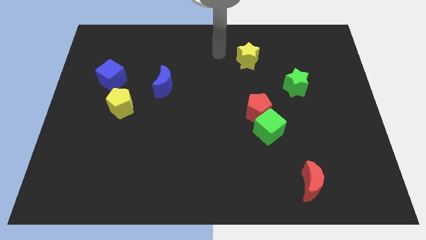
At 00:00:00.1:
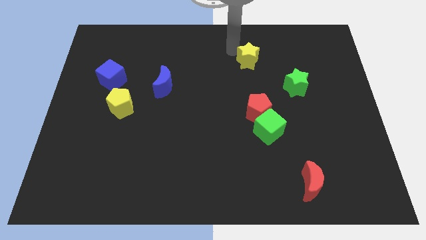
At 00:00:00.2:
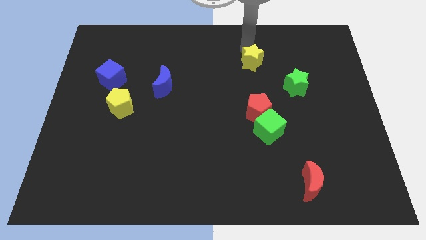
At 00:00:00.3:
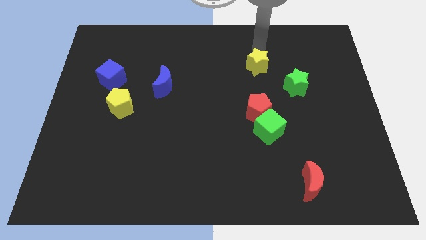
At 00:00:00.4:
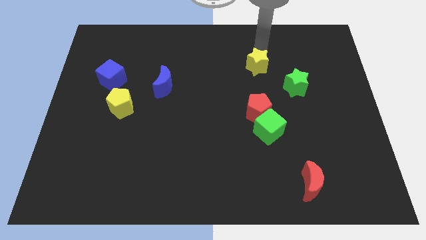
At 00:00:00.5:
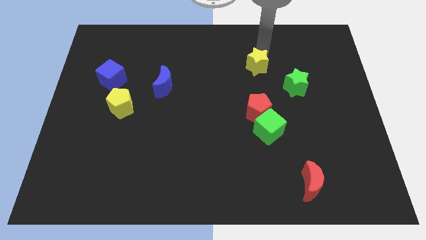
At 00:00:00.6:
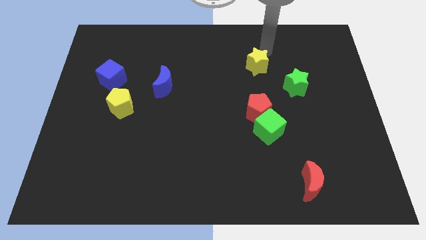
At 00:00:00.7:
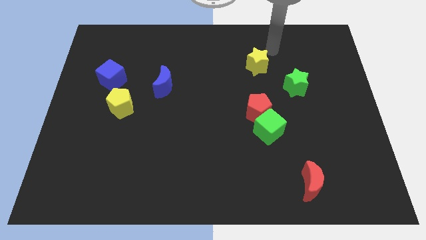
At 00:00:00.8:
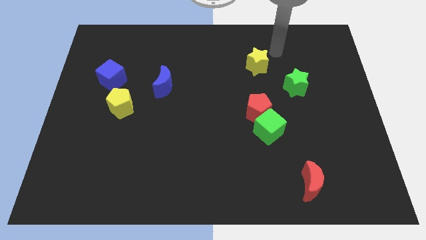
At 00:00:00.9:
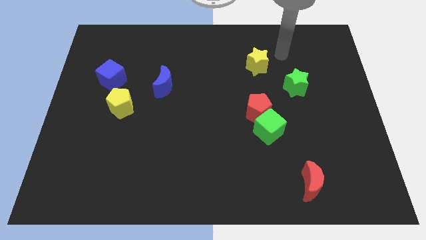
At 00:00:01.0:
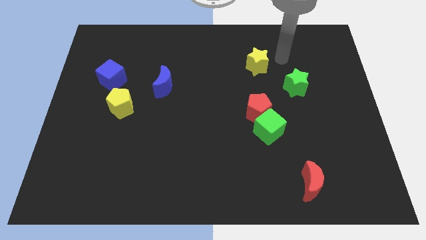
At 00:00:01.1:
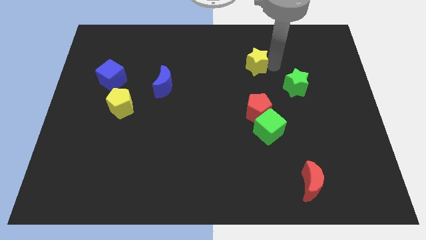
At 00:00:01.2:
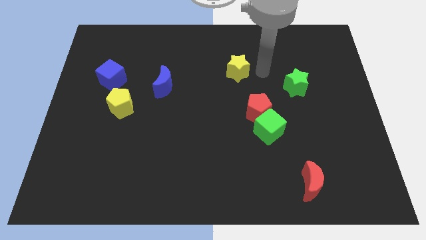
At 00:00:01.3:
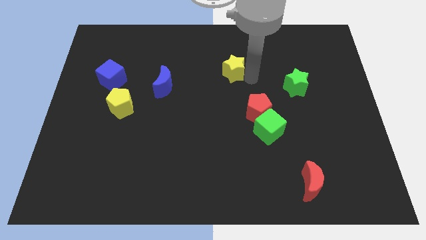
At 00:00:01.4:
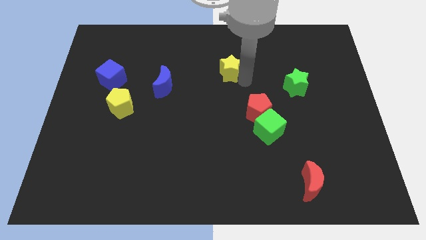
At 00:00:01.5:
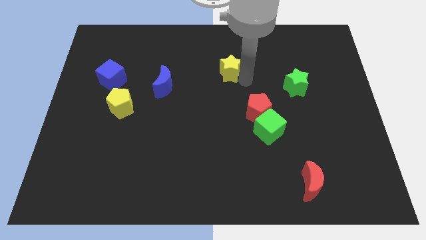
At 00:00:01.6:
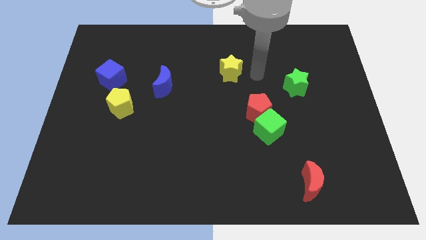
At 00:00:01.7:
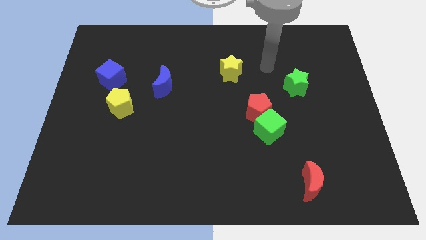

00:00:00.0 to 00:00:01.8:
slide the yellow star diagonally on the top left side of the red pentagon

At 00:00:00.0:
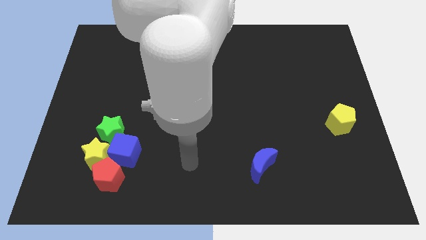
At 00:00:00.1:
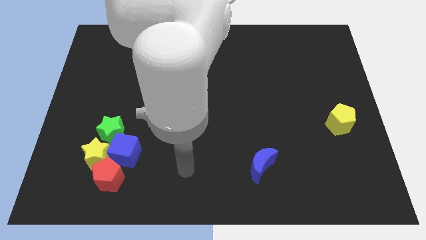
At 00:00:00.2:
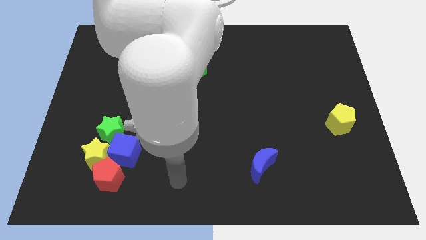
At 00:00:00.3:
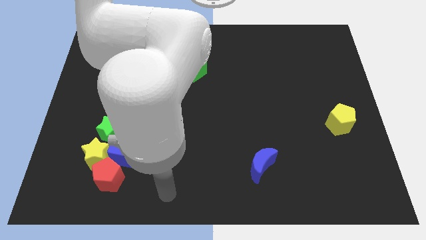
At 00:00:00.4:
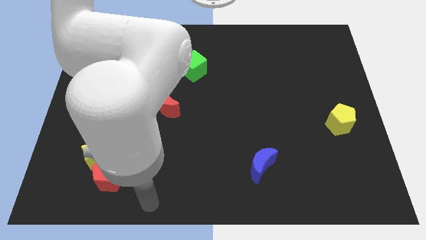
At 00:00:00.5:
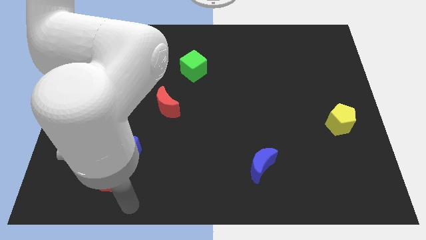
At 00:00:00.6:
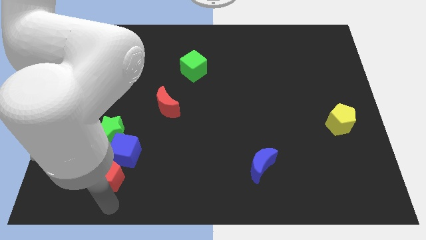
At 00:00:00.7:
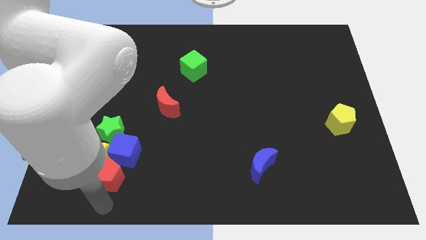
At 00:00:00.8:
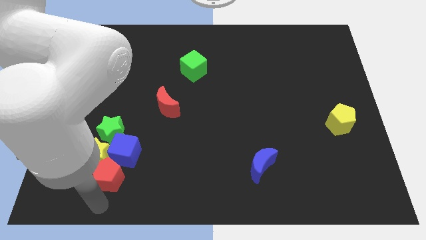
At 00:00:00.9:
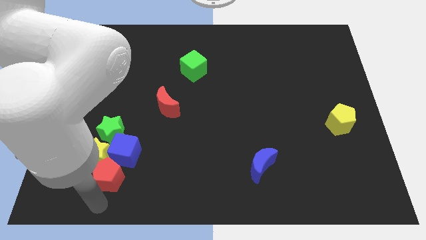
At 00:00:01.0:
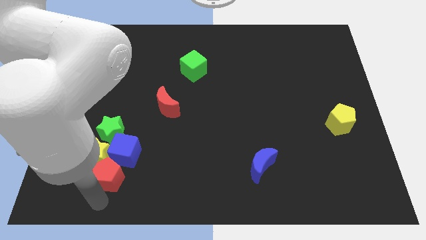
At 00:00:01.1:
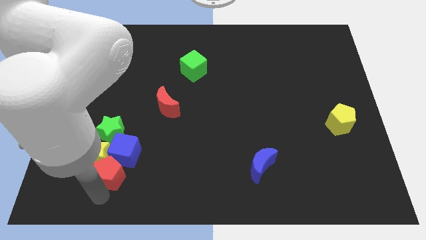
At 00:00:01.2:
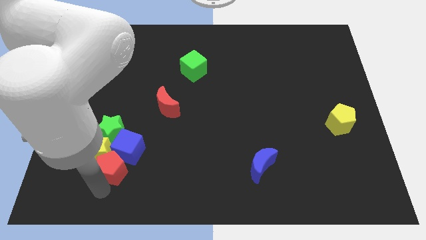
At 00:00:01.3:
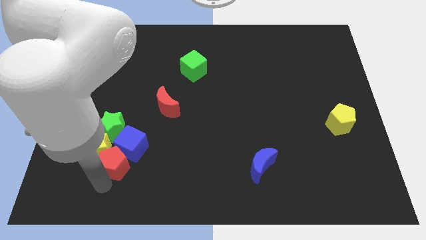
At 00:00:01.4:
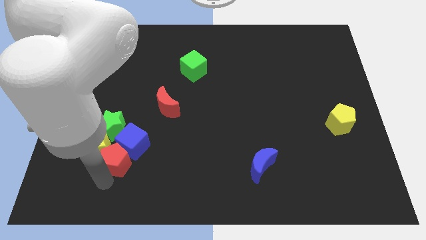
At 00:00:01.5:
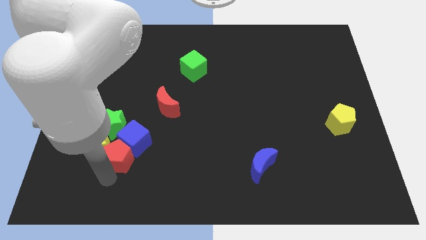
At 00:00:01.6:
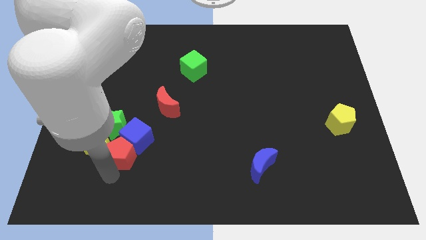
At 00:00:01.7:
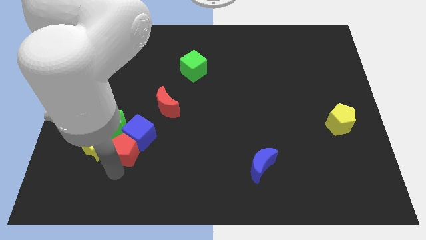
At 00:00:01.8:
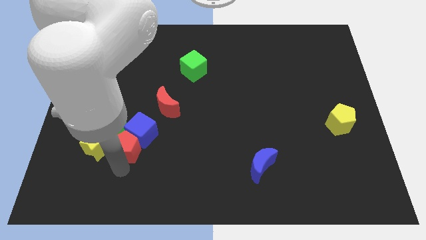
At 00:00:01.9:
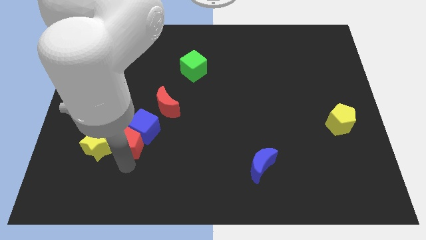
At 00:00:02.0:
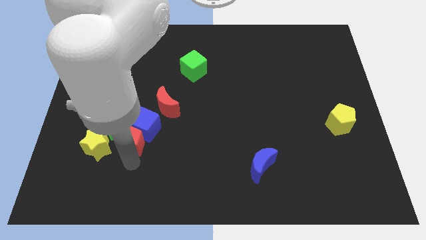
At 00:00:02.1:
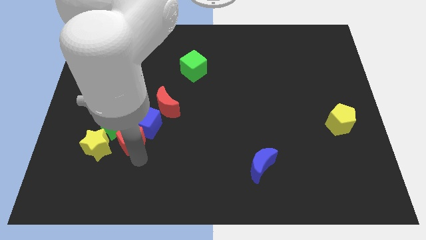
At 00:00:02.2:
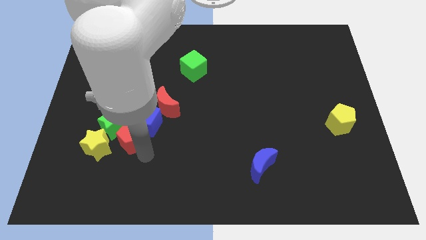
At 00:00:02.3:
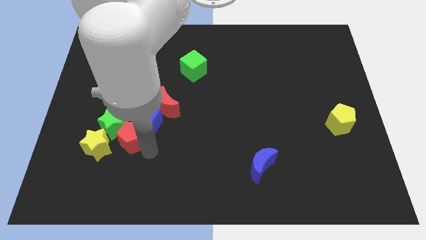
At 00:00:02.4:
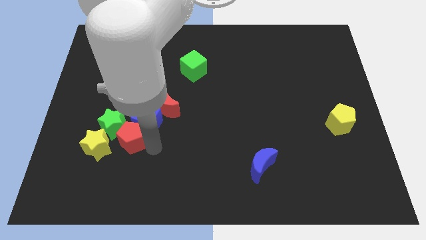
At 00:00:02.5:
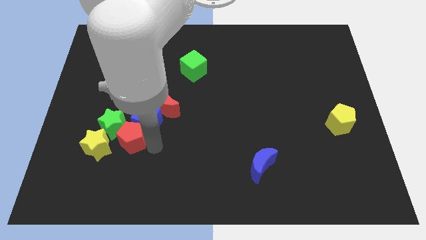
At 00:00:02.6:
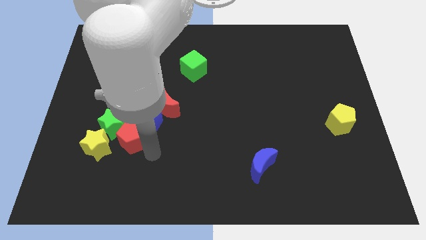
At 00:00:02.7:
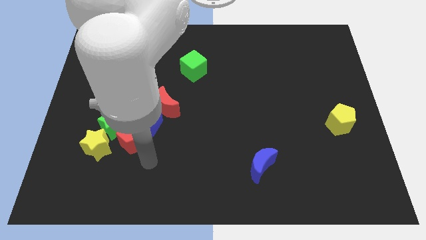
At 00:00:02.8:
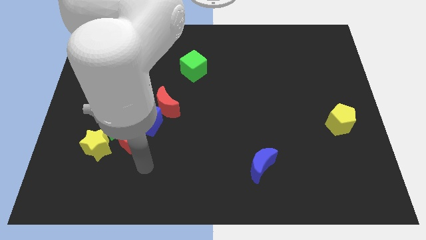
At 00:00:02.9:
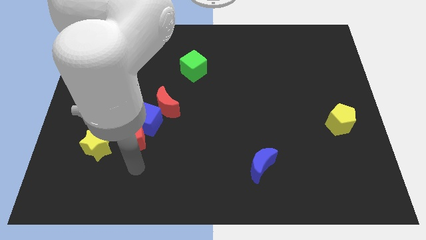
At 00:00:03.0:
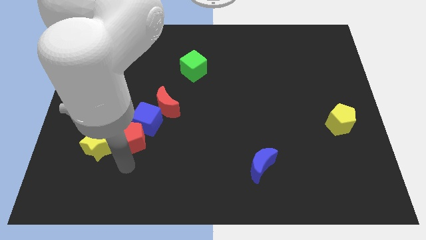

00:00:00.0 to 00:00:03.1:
move red pentagon along with blue cube towards top

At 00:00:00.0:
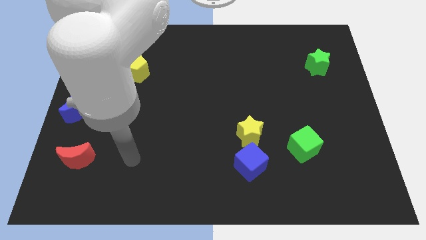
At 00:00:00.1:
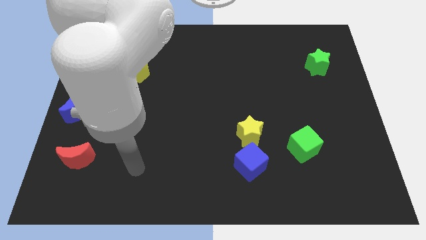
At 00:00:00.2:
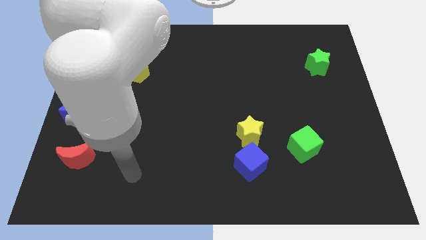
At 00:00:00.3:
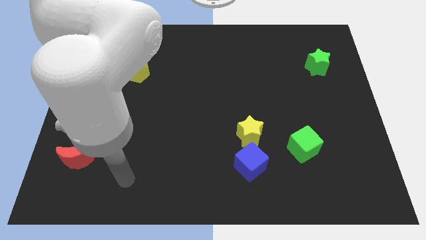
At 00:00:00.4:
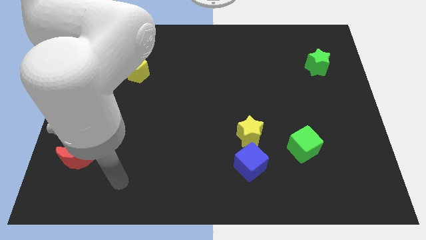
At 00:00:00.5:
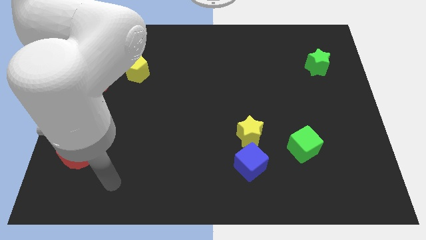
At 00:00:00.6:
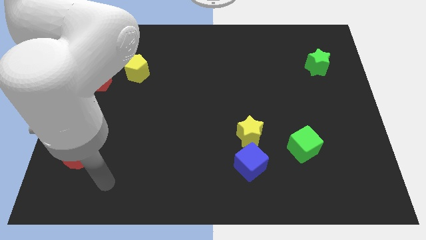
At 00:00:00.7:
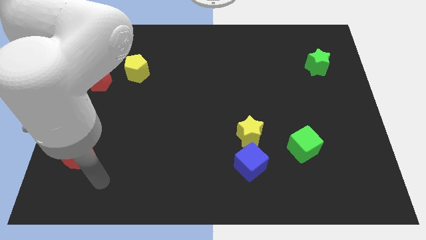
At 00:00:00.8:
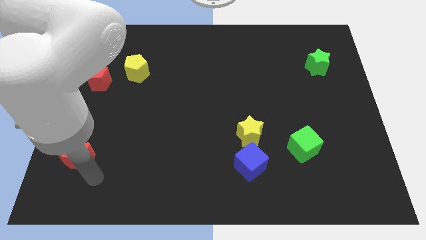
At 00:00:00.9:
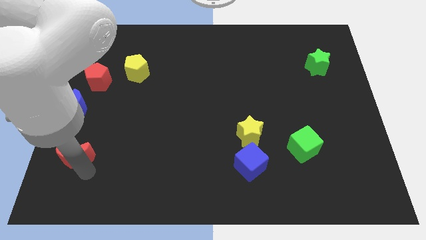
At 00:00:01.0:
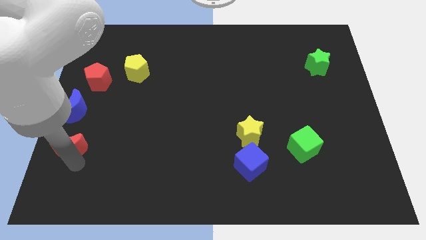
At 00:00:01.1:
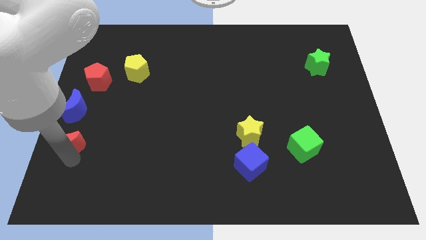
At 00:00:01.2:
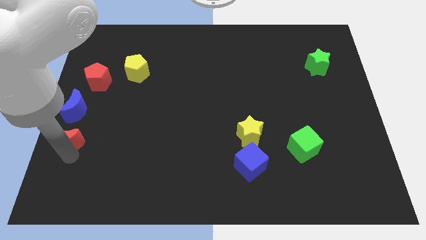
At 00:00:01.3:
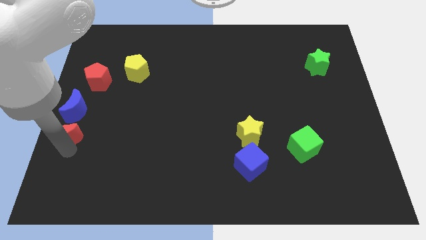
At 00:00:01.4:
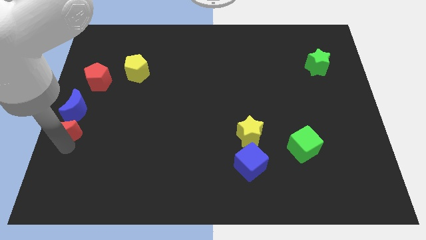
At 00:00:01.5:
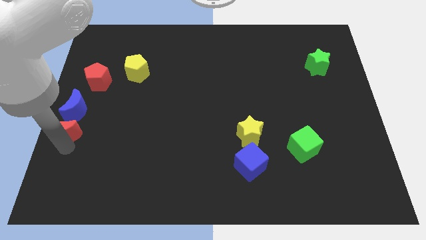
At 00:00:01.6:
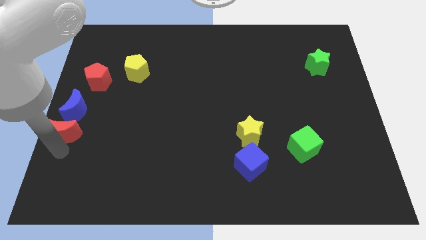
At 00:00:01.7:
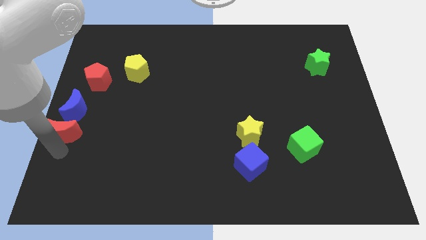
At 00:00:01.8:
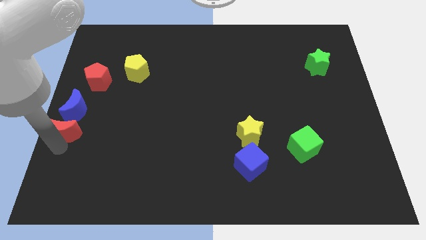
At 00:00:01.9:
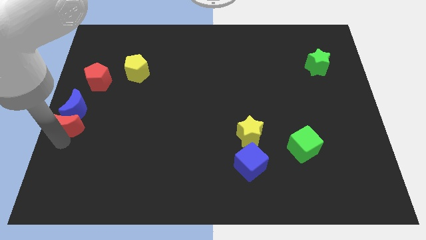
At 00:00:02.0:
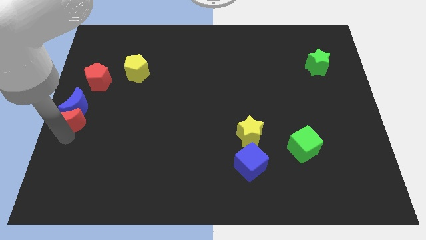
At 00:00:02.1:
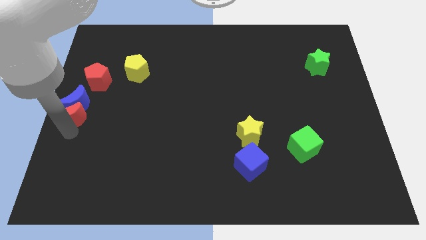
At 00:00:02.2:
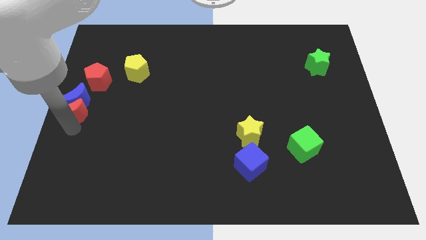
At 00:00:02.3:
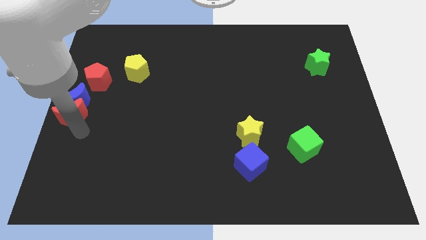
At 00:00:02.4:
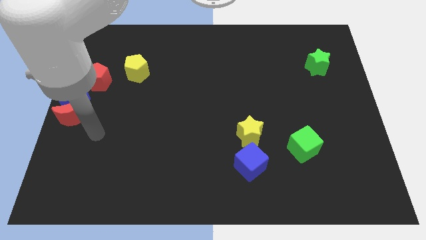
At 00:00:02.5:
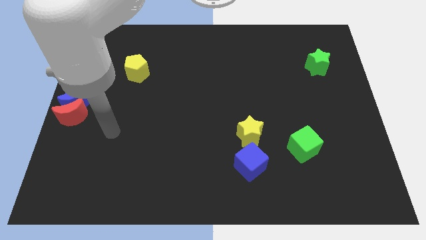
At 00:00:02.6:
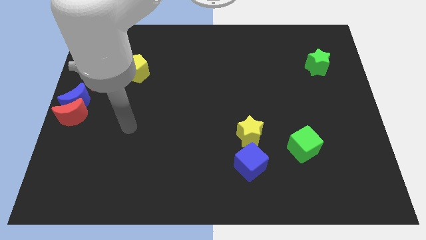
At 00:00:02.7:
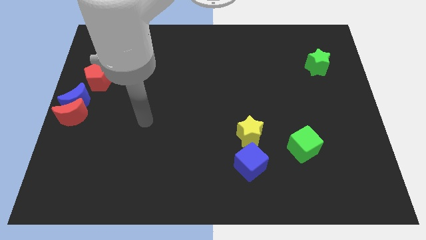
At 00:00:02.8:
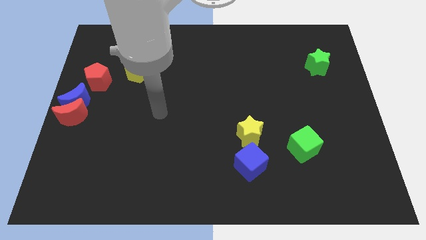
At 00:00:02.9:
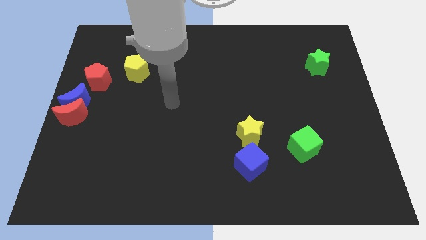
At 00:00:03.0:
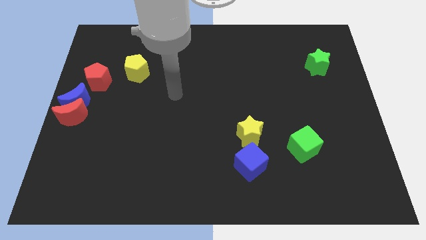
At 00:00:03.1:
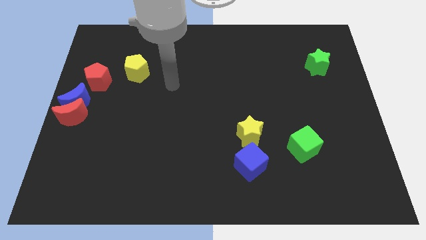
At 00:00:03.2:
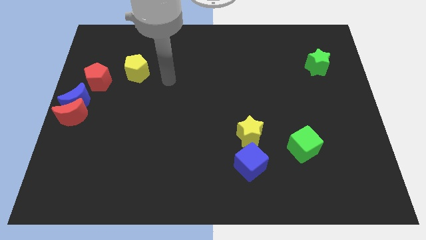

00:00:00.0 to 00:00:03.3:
push the red crescent into the blue crescent

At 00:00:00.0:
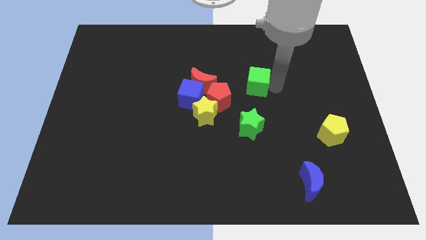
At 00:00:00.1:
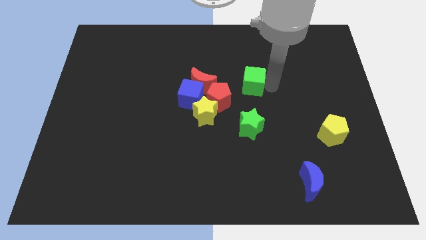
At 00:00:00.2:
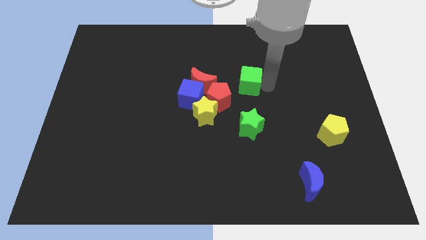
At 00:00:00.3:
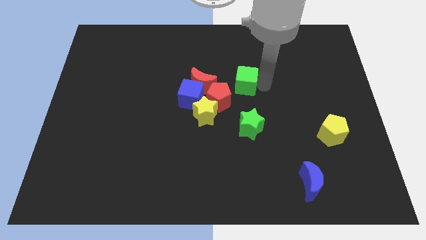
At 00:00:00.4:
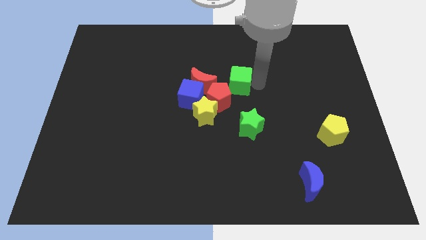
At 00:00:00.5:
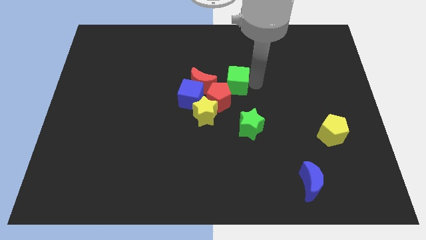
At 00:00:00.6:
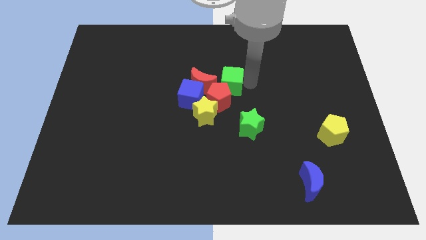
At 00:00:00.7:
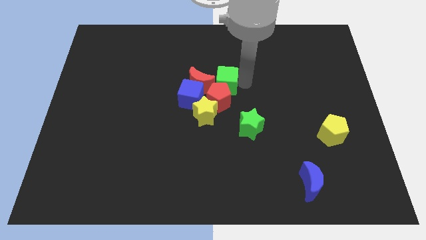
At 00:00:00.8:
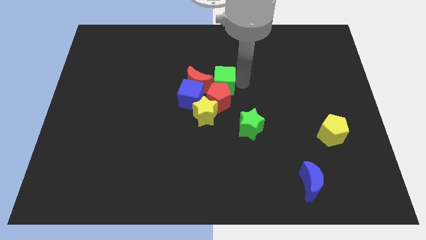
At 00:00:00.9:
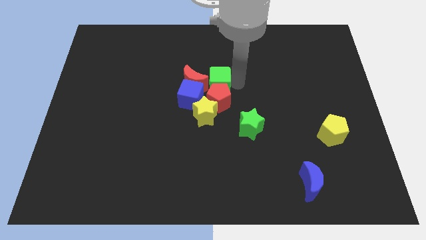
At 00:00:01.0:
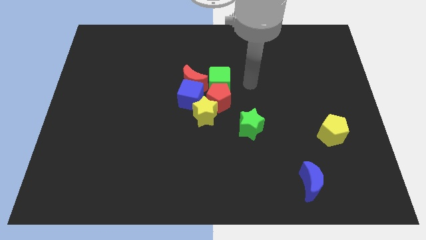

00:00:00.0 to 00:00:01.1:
move the green cube to the top of the red pentagon
